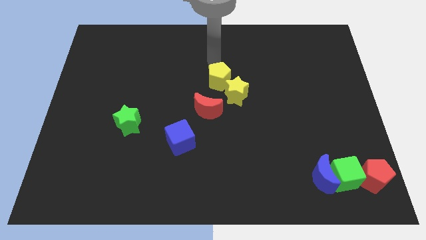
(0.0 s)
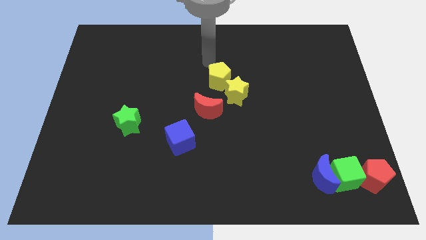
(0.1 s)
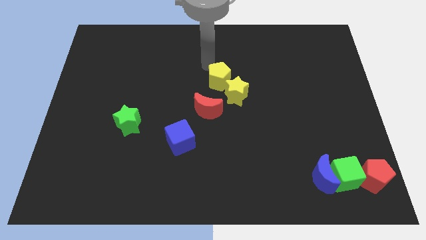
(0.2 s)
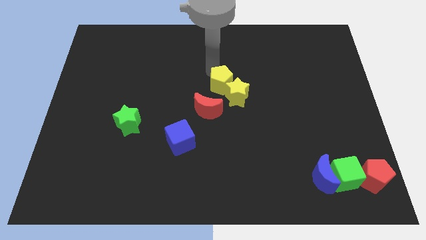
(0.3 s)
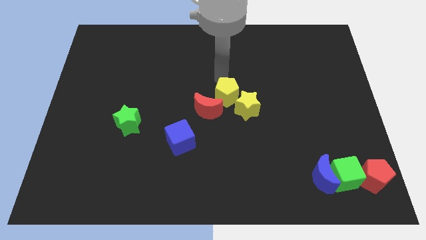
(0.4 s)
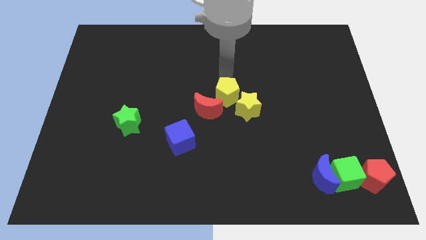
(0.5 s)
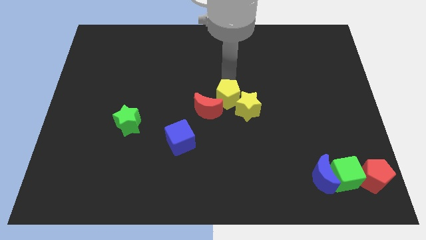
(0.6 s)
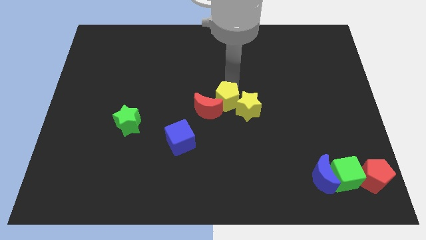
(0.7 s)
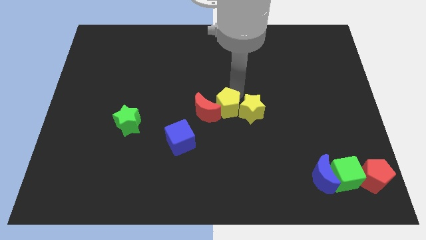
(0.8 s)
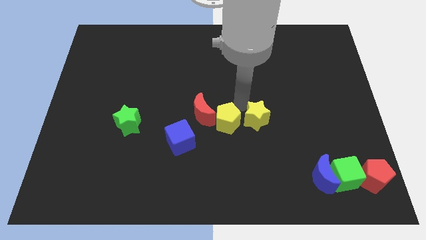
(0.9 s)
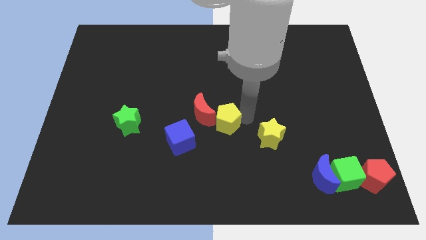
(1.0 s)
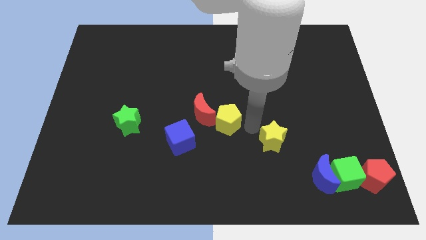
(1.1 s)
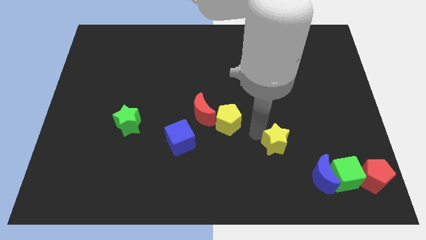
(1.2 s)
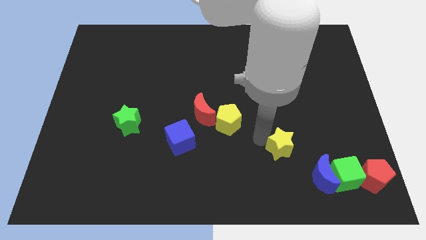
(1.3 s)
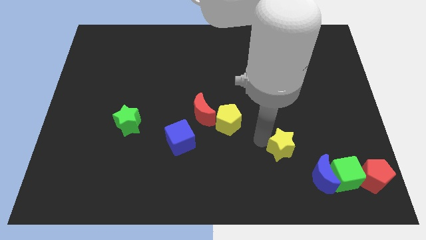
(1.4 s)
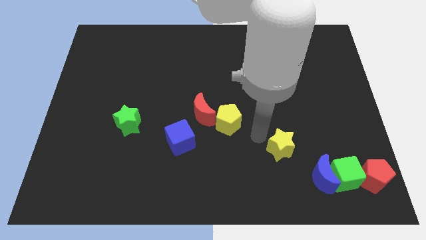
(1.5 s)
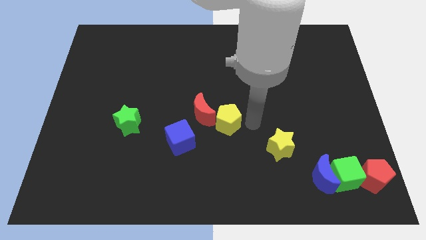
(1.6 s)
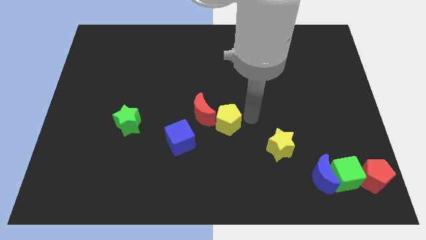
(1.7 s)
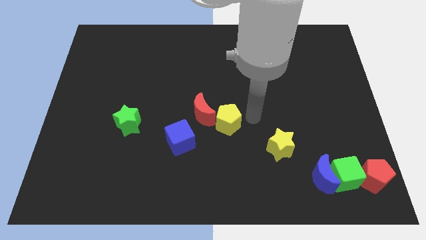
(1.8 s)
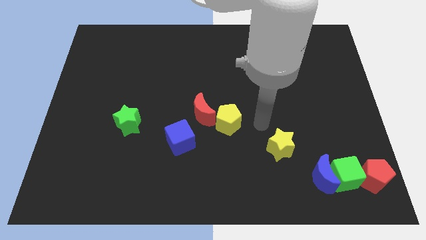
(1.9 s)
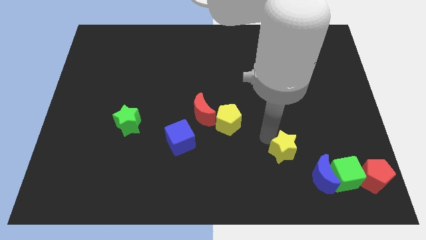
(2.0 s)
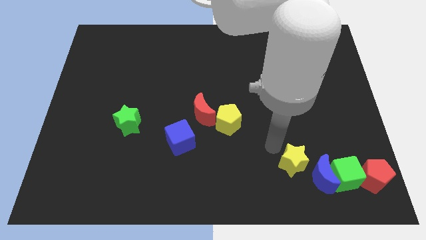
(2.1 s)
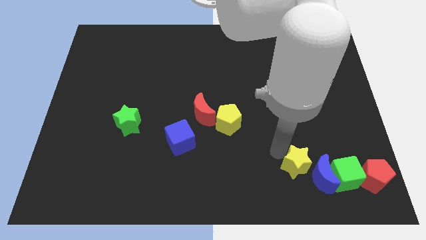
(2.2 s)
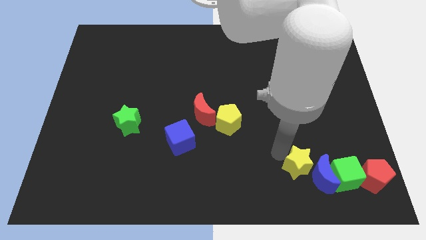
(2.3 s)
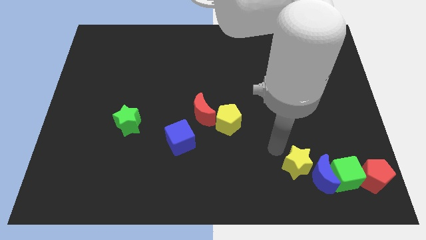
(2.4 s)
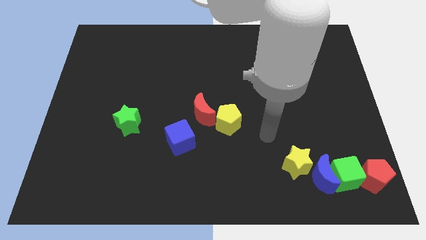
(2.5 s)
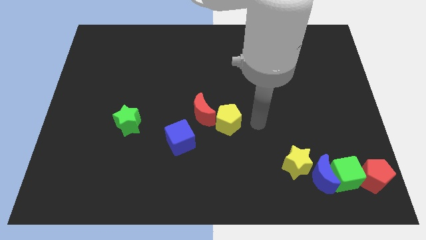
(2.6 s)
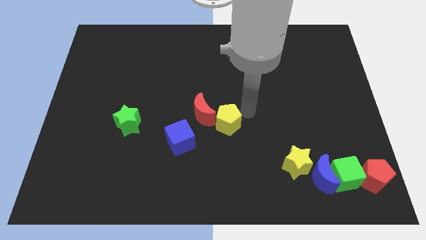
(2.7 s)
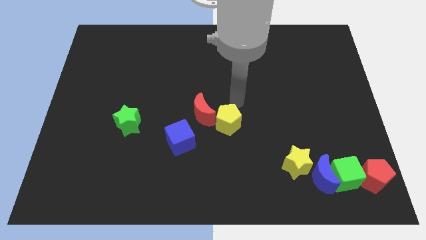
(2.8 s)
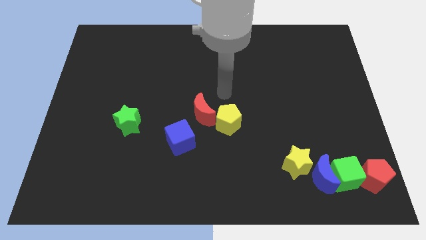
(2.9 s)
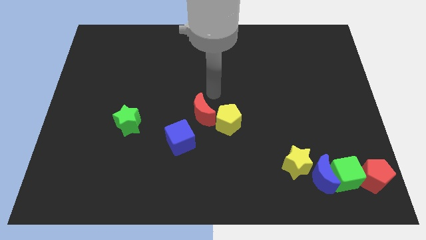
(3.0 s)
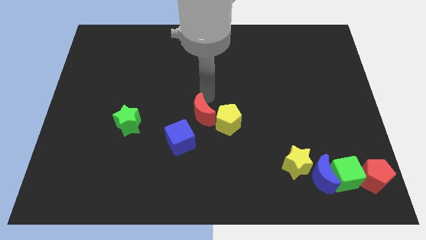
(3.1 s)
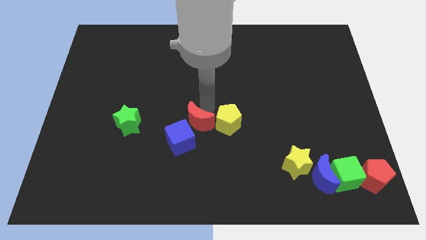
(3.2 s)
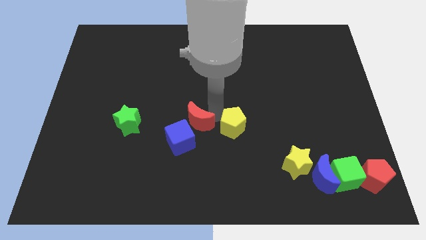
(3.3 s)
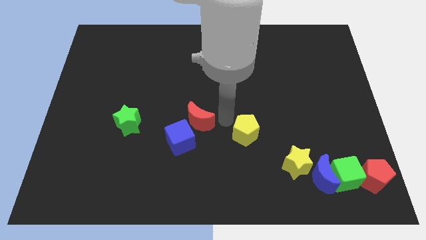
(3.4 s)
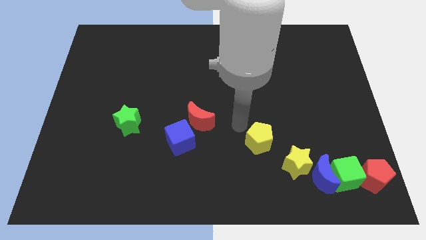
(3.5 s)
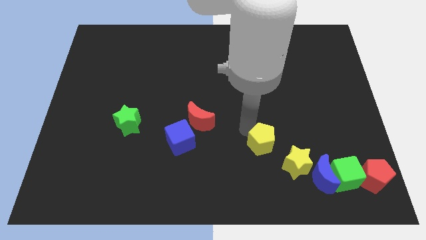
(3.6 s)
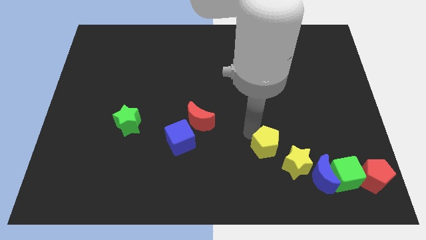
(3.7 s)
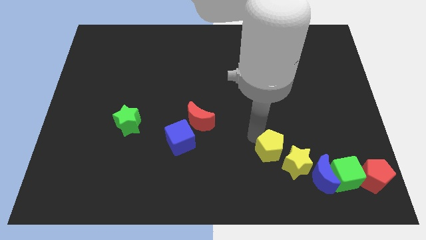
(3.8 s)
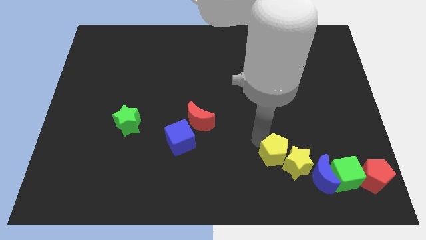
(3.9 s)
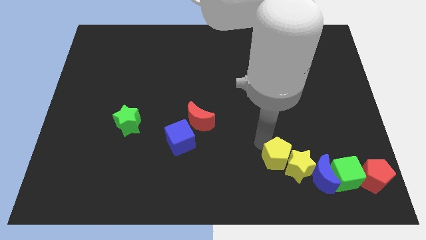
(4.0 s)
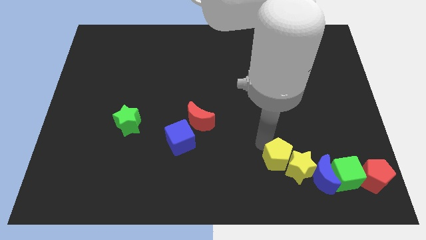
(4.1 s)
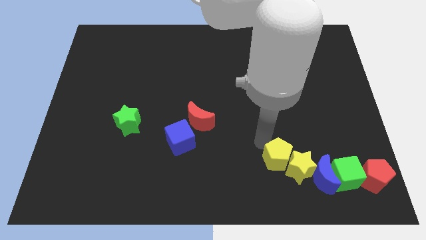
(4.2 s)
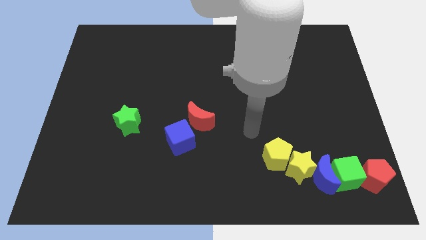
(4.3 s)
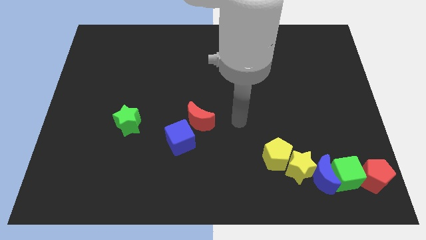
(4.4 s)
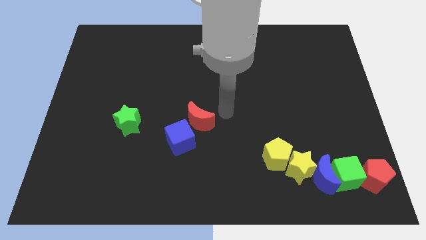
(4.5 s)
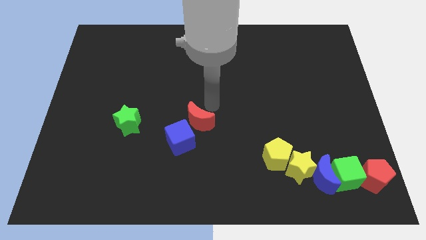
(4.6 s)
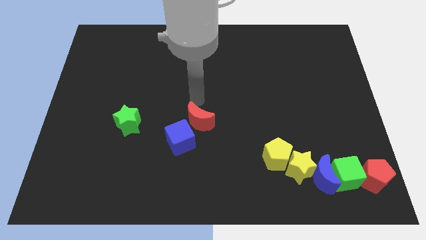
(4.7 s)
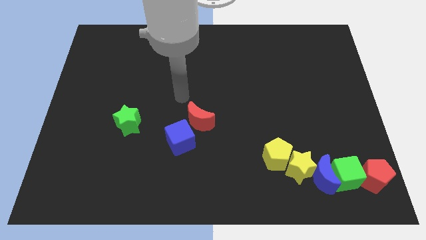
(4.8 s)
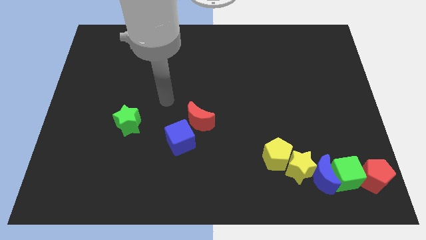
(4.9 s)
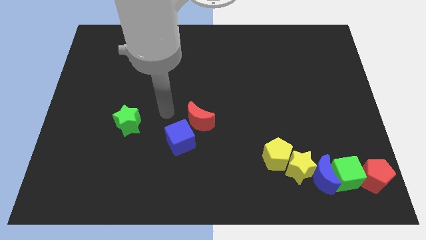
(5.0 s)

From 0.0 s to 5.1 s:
push yellow blocks towards blue moon

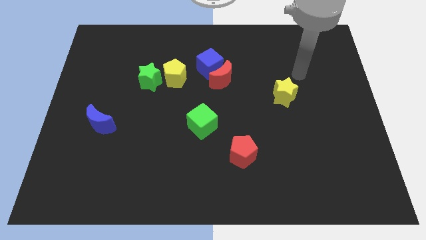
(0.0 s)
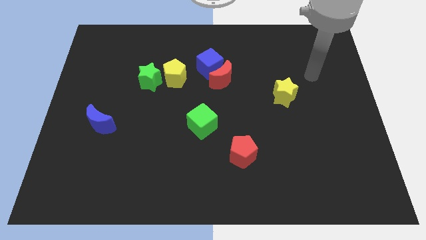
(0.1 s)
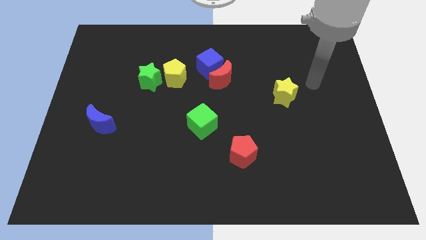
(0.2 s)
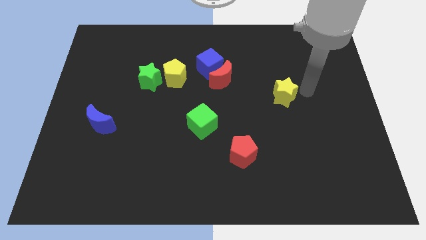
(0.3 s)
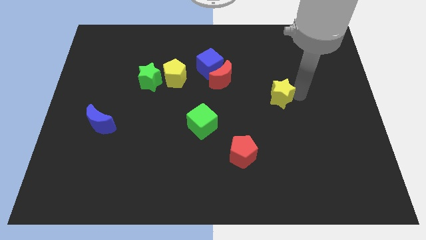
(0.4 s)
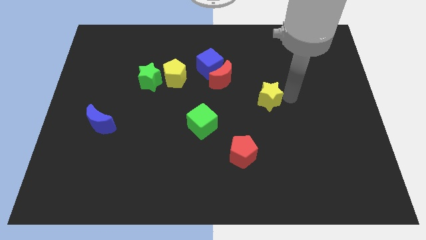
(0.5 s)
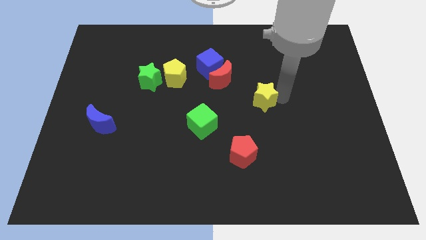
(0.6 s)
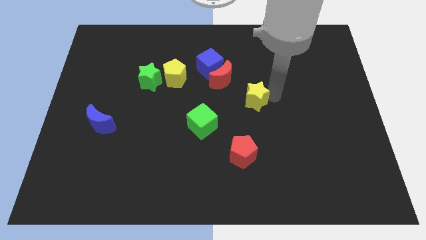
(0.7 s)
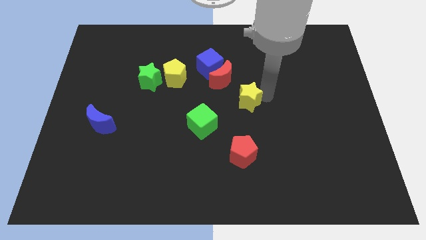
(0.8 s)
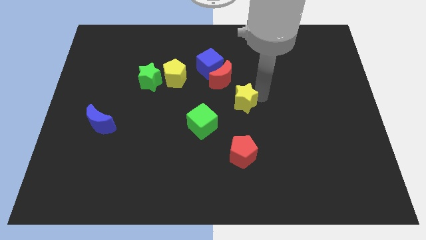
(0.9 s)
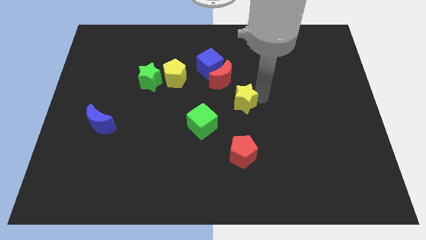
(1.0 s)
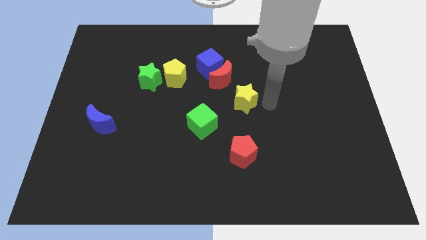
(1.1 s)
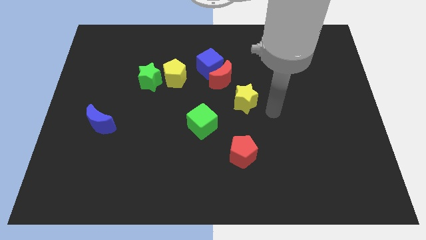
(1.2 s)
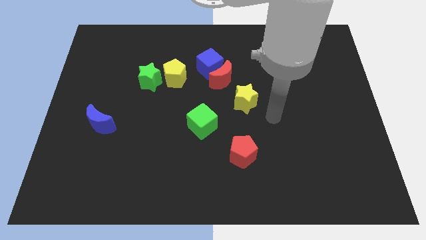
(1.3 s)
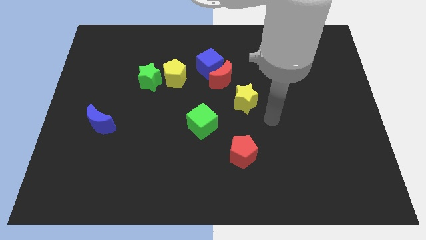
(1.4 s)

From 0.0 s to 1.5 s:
move the yellow star parallel to the top of the red pentagon

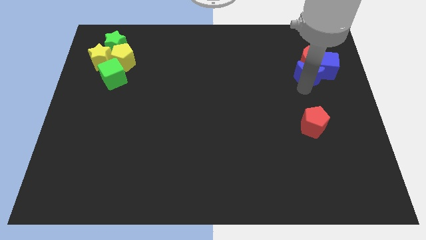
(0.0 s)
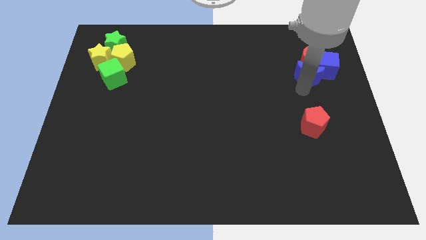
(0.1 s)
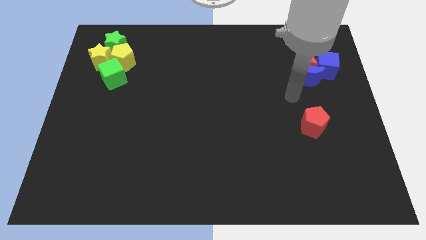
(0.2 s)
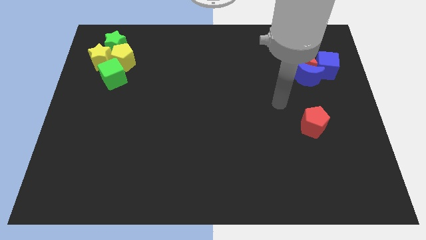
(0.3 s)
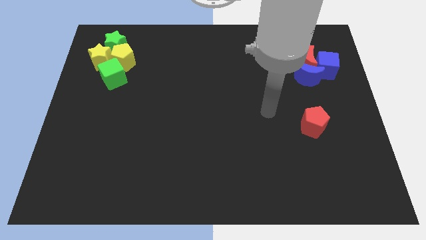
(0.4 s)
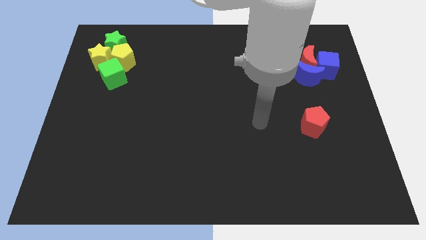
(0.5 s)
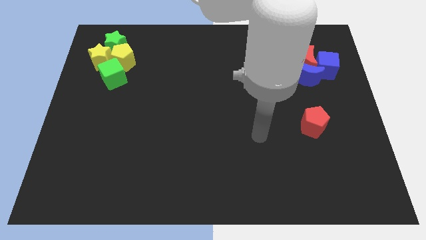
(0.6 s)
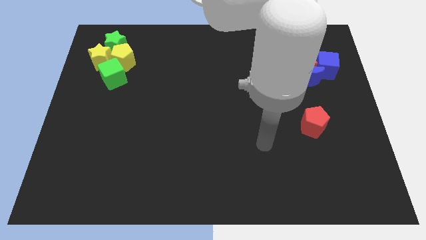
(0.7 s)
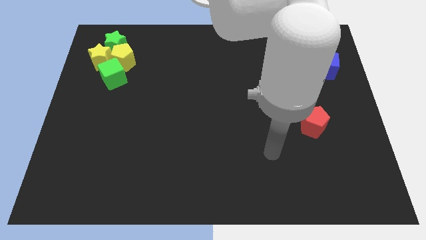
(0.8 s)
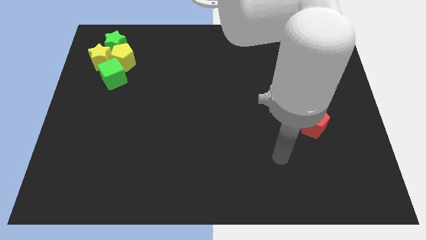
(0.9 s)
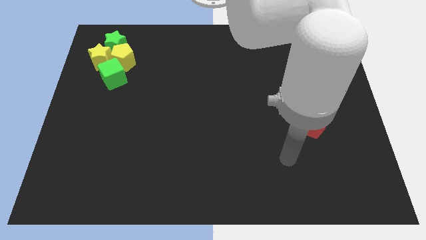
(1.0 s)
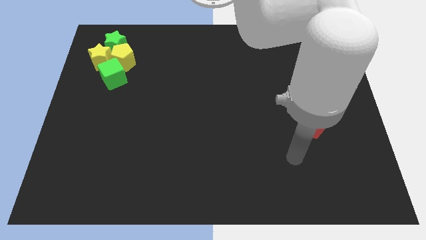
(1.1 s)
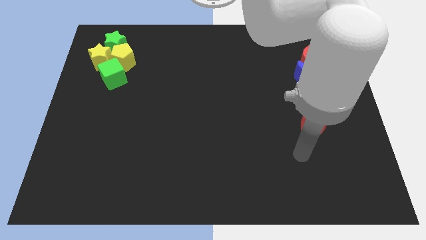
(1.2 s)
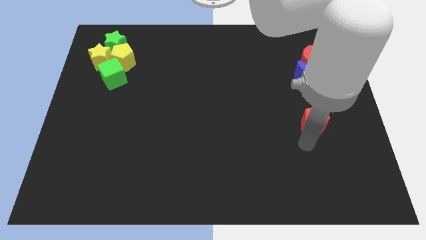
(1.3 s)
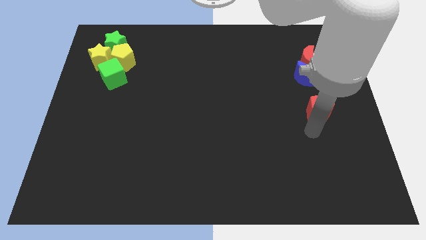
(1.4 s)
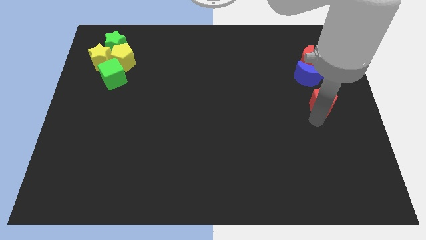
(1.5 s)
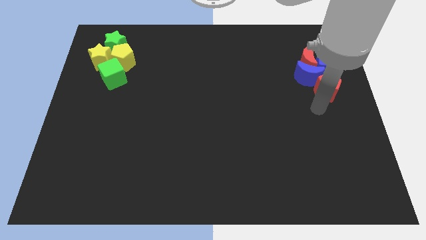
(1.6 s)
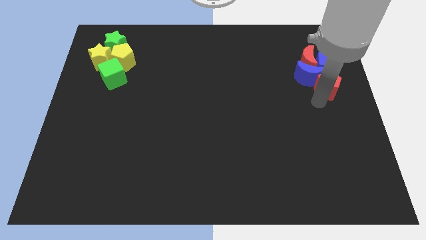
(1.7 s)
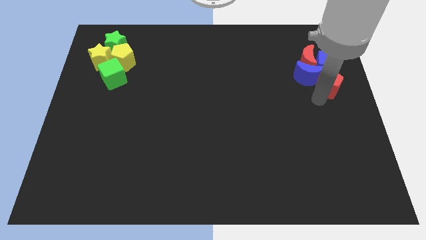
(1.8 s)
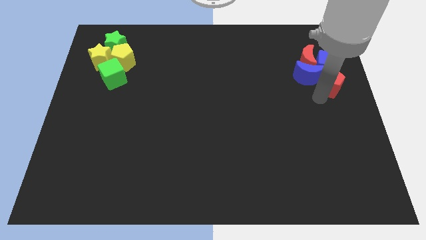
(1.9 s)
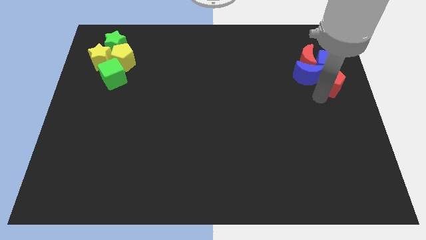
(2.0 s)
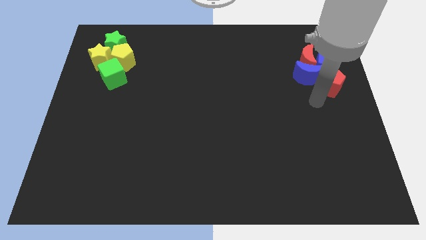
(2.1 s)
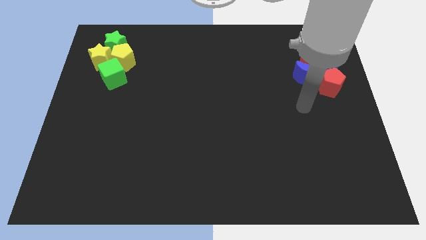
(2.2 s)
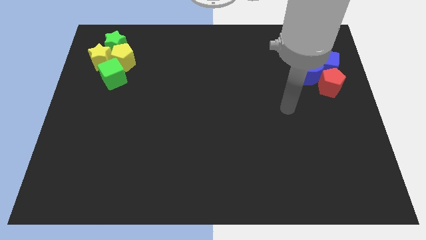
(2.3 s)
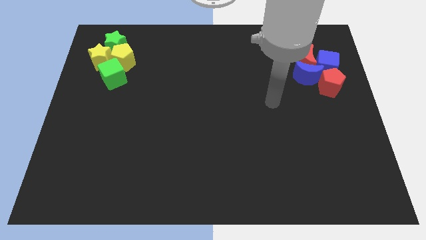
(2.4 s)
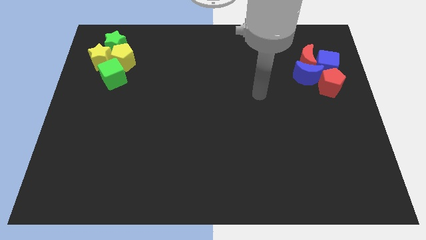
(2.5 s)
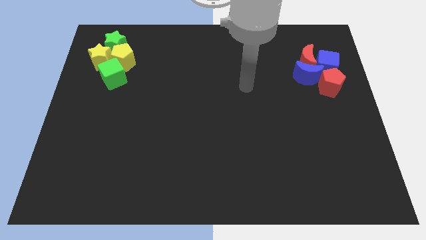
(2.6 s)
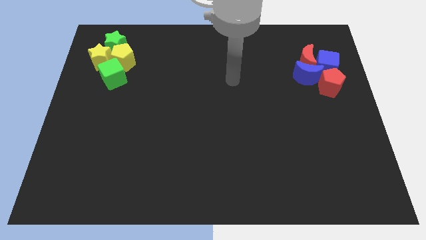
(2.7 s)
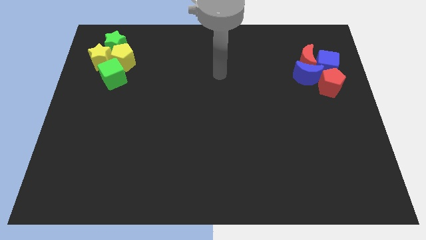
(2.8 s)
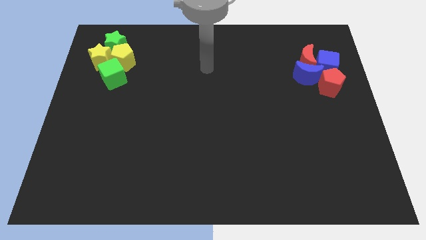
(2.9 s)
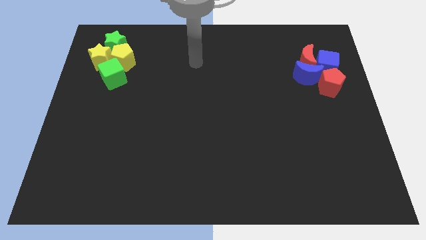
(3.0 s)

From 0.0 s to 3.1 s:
place red pentagon to the group of blocks
